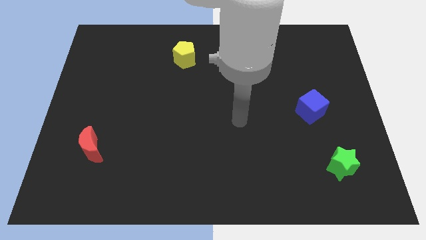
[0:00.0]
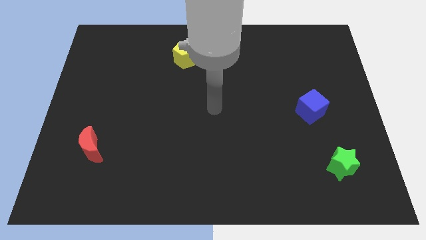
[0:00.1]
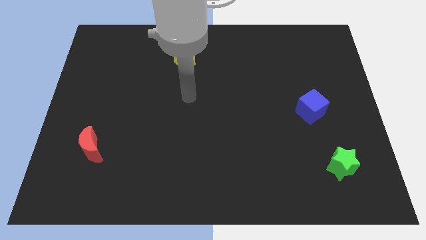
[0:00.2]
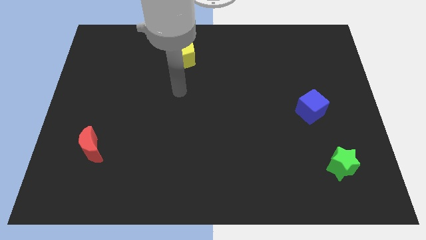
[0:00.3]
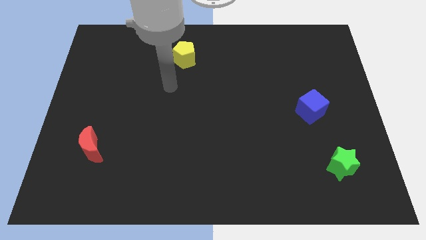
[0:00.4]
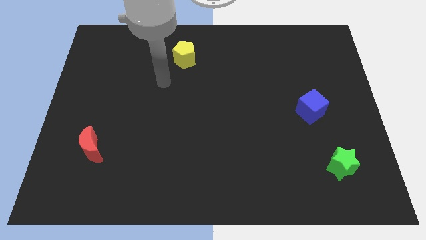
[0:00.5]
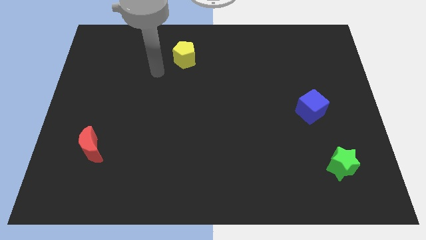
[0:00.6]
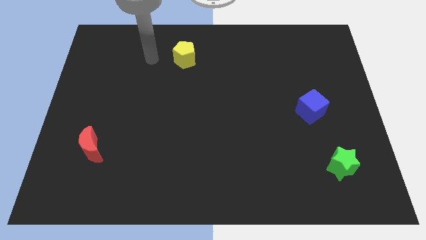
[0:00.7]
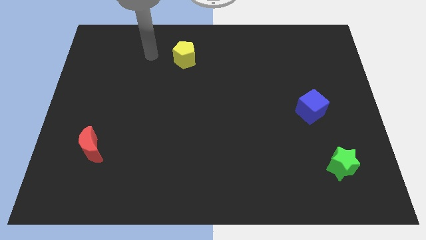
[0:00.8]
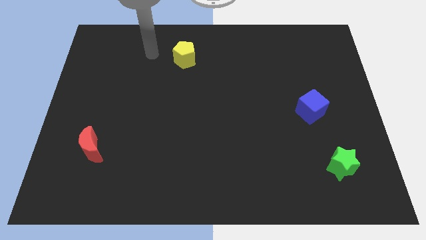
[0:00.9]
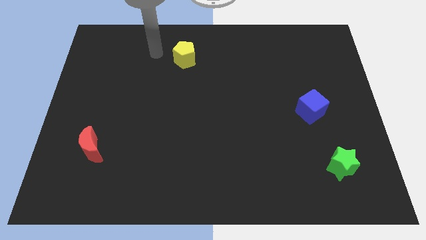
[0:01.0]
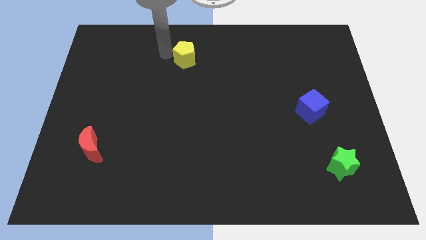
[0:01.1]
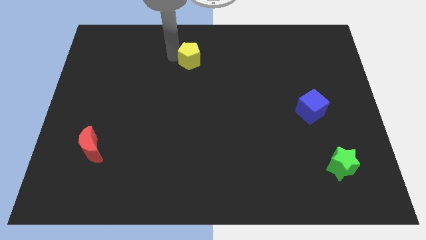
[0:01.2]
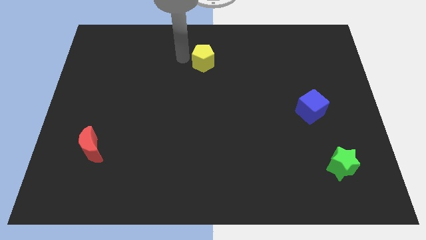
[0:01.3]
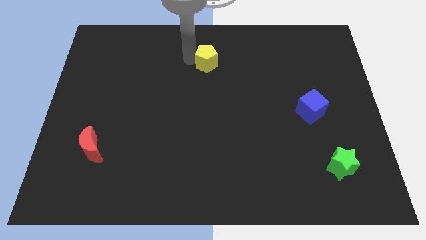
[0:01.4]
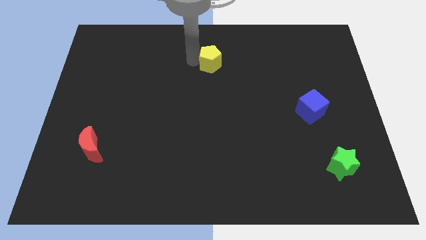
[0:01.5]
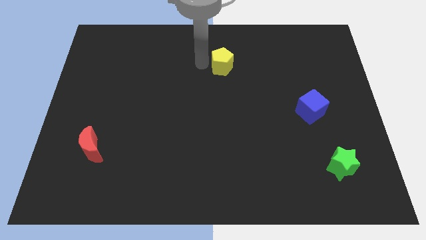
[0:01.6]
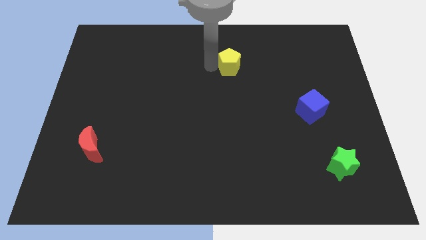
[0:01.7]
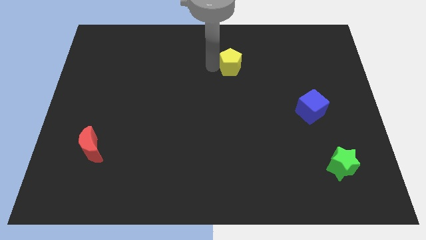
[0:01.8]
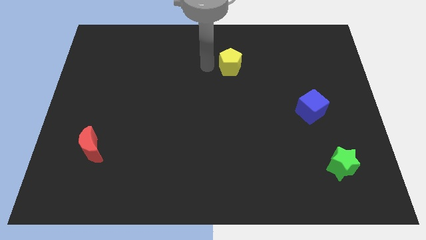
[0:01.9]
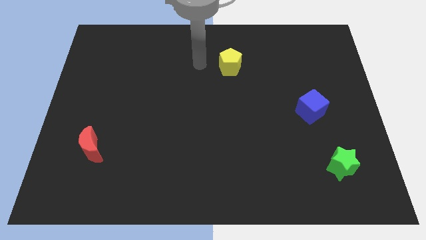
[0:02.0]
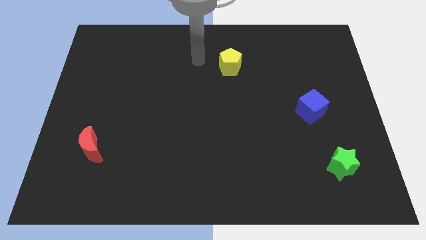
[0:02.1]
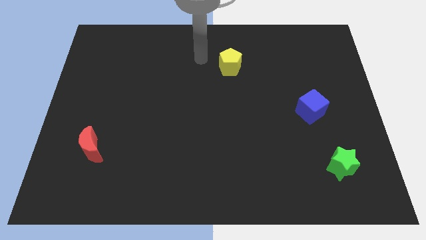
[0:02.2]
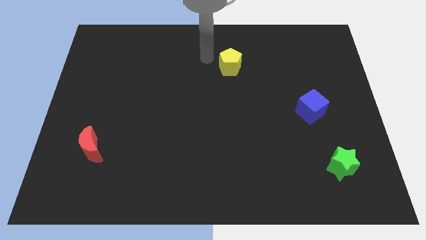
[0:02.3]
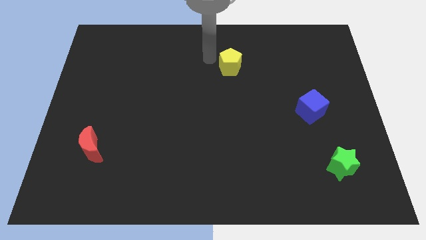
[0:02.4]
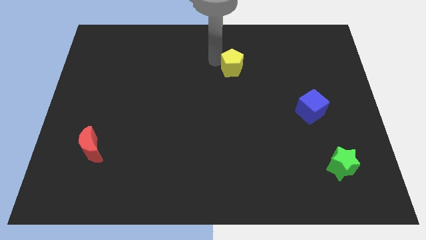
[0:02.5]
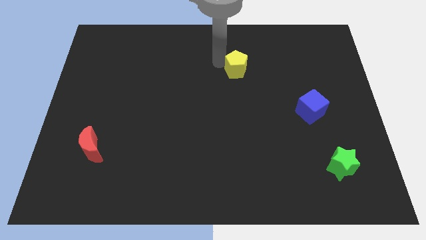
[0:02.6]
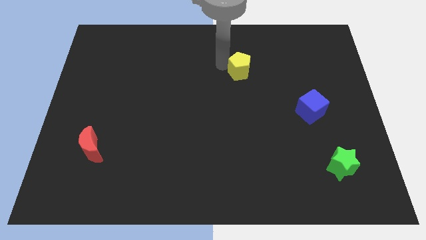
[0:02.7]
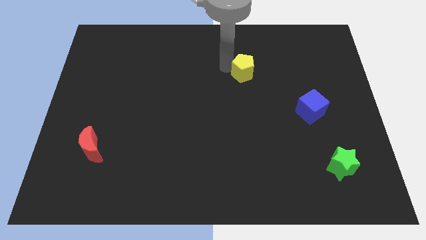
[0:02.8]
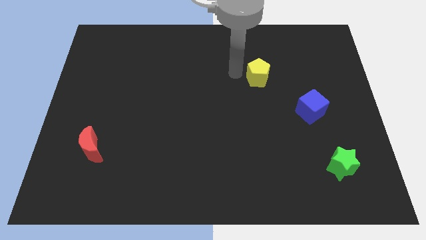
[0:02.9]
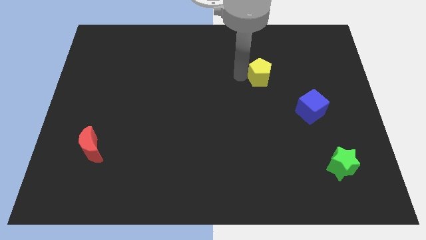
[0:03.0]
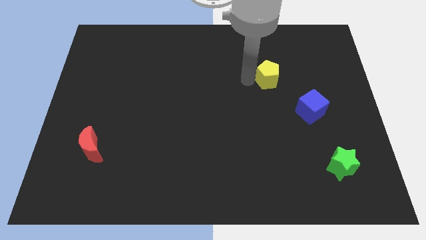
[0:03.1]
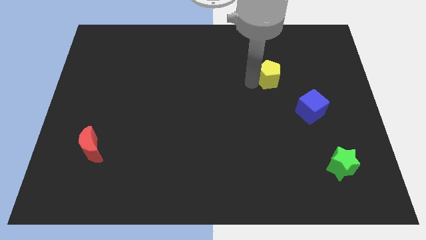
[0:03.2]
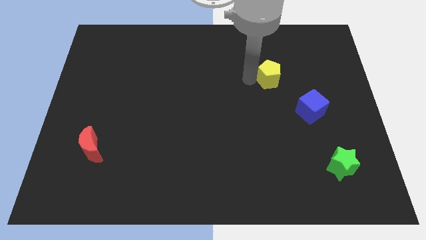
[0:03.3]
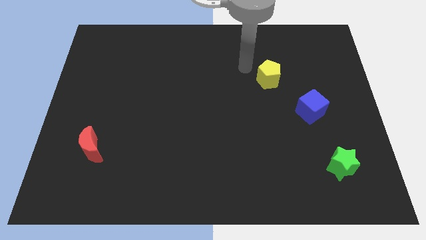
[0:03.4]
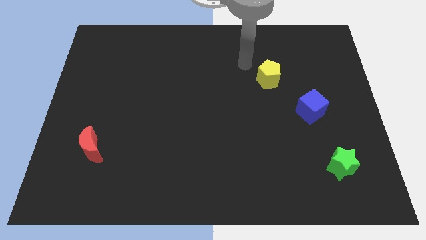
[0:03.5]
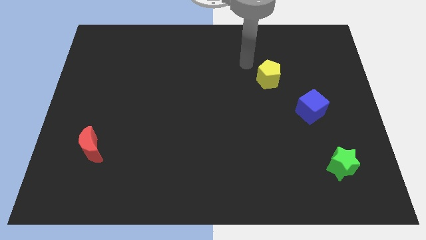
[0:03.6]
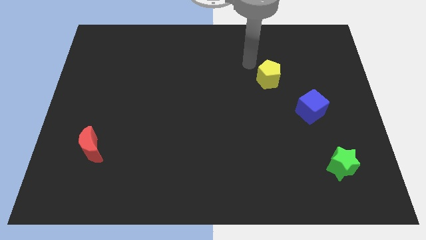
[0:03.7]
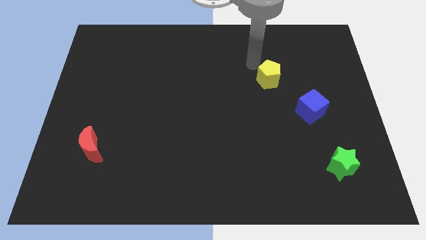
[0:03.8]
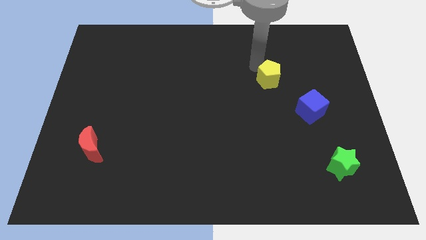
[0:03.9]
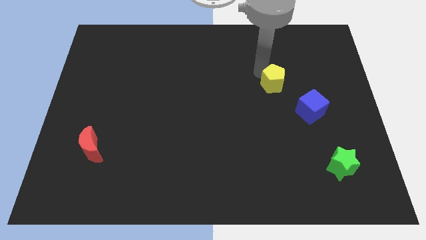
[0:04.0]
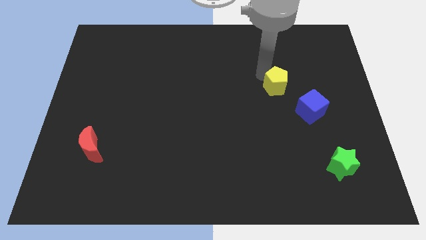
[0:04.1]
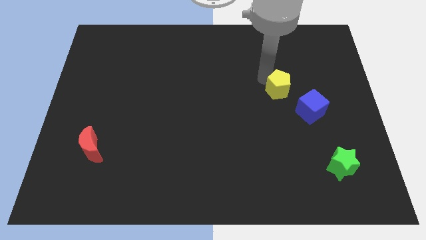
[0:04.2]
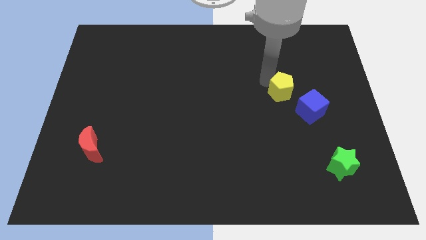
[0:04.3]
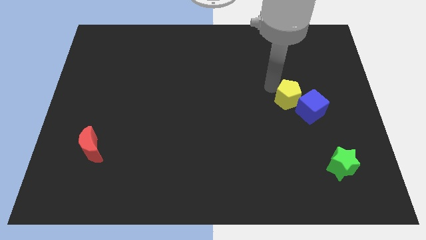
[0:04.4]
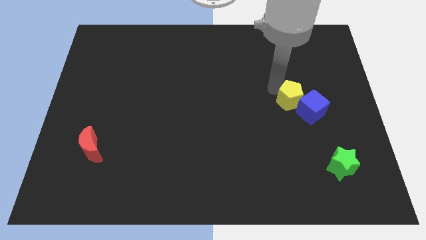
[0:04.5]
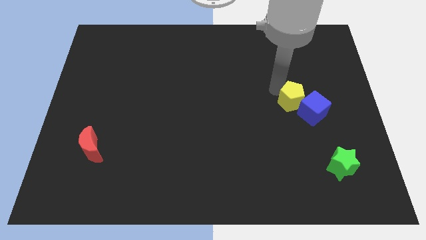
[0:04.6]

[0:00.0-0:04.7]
slide the yellow pentagon towards the blue cube

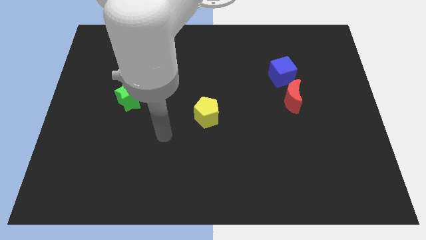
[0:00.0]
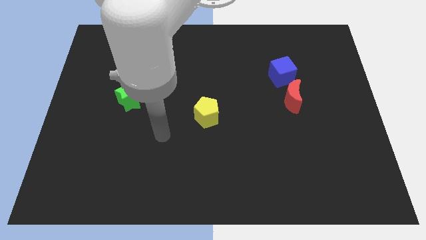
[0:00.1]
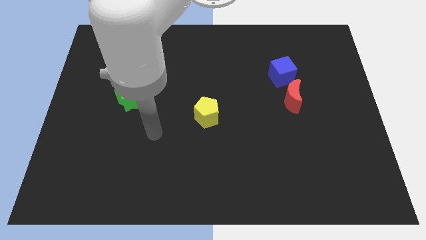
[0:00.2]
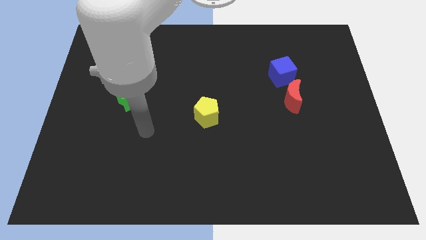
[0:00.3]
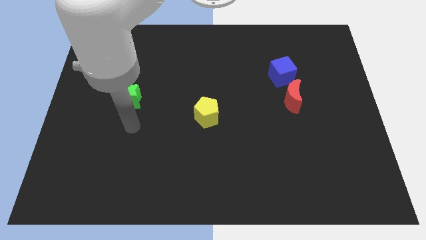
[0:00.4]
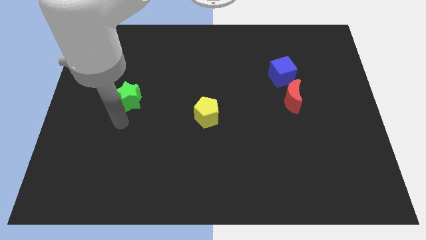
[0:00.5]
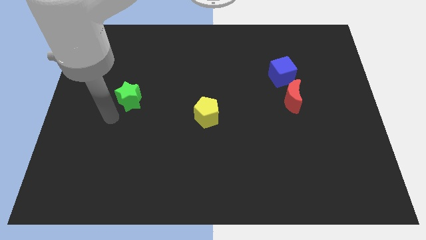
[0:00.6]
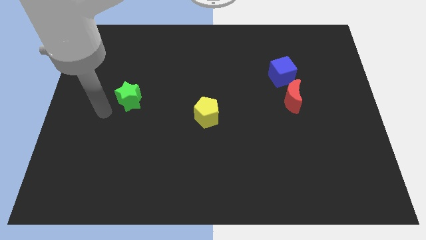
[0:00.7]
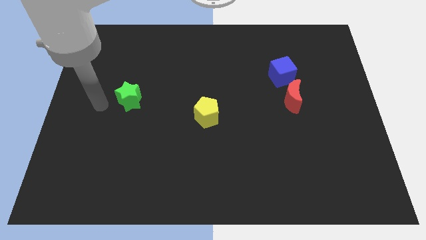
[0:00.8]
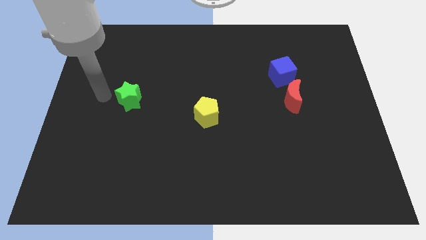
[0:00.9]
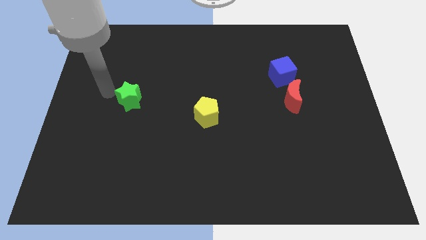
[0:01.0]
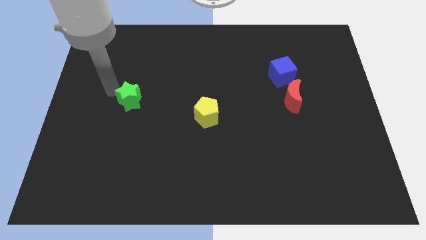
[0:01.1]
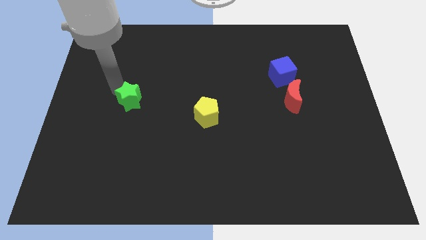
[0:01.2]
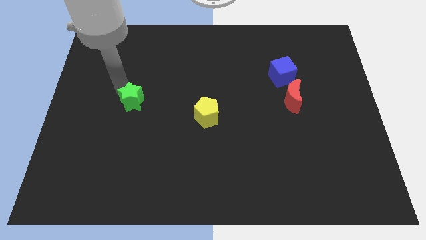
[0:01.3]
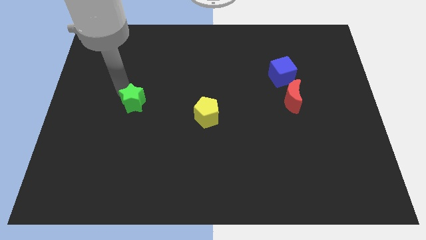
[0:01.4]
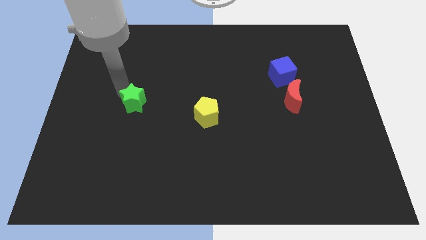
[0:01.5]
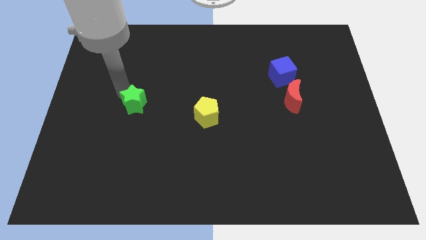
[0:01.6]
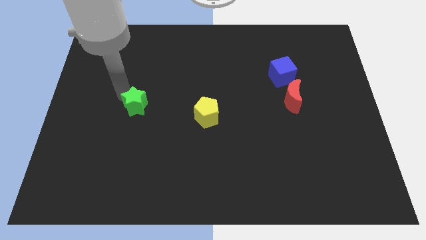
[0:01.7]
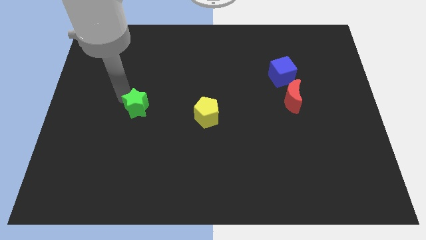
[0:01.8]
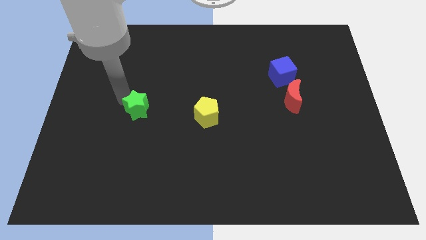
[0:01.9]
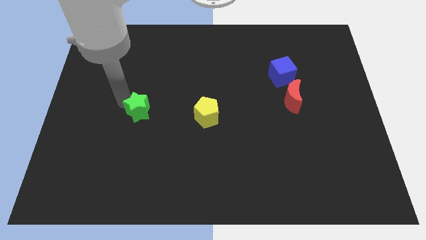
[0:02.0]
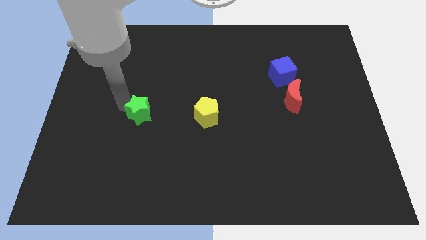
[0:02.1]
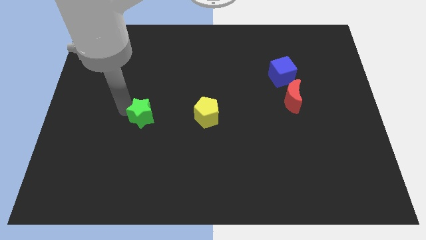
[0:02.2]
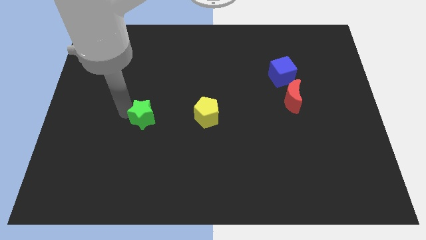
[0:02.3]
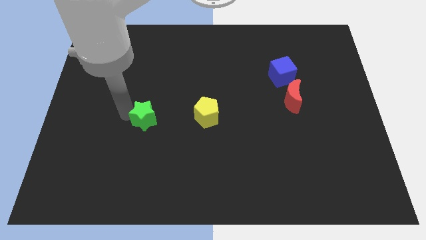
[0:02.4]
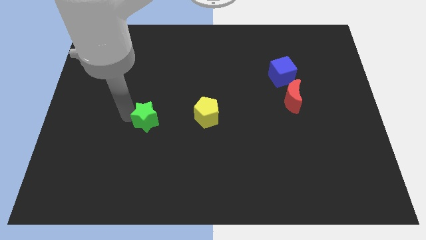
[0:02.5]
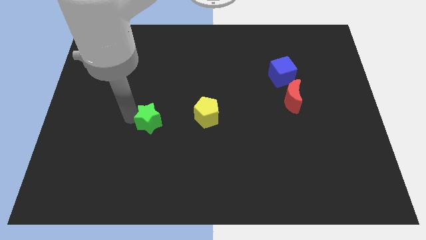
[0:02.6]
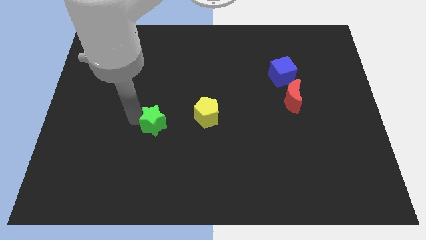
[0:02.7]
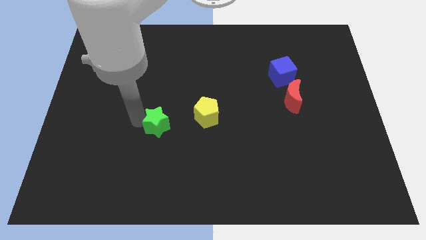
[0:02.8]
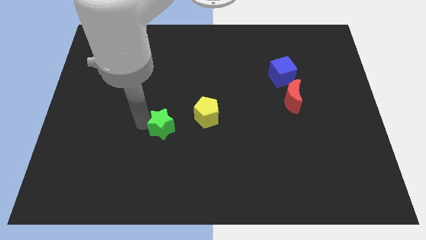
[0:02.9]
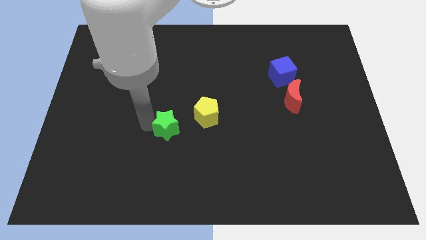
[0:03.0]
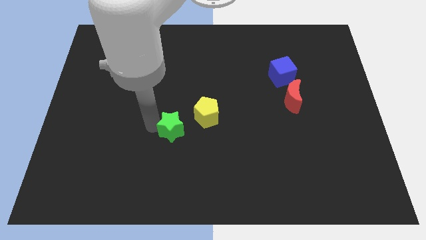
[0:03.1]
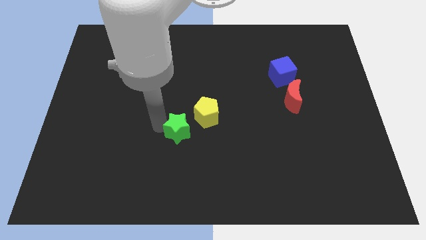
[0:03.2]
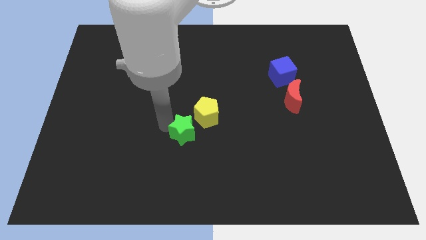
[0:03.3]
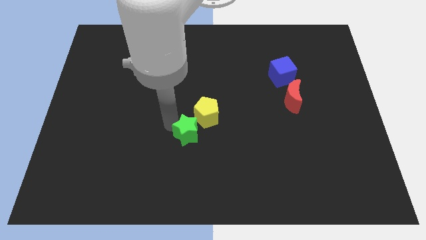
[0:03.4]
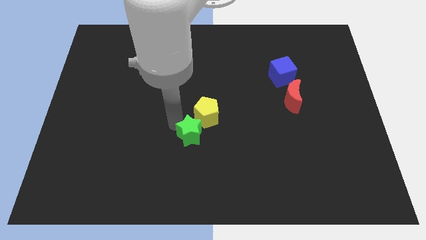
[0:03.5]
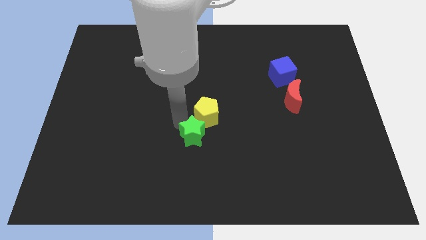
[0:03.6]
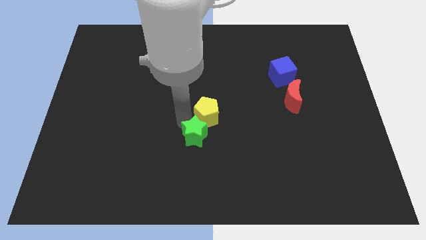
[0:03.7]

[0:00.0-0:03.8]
put the star towards the yellow block
